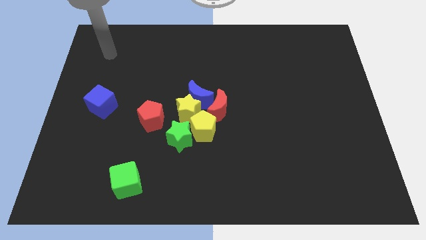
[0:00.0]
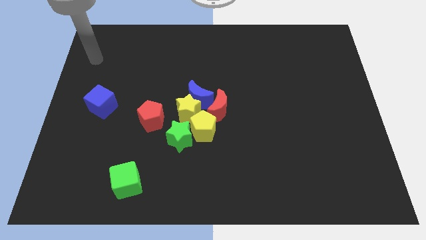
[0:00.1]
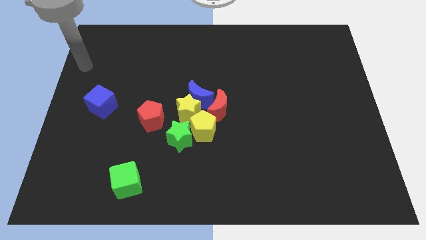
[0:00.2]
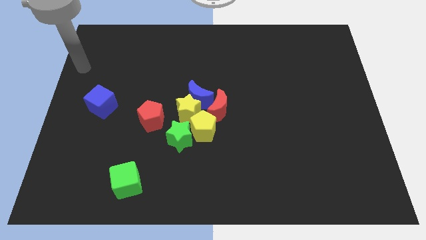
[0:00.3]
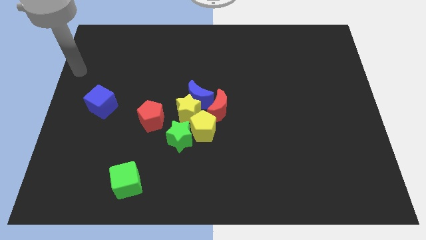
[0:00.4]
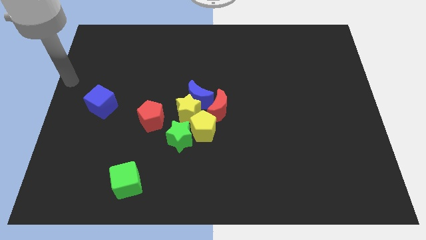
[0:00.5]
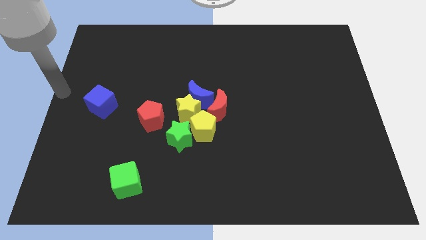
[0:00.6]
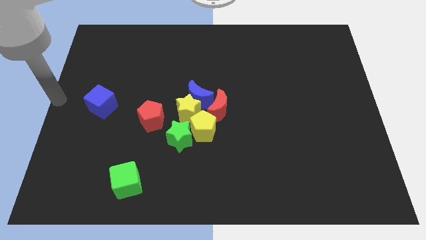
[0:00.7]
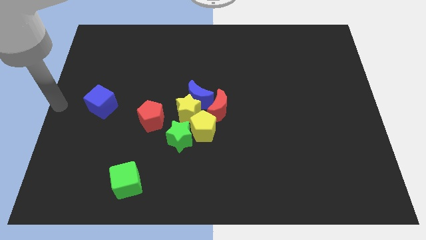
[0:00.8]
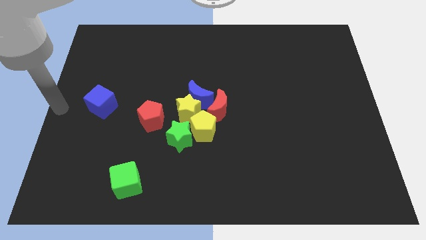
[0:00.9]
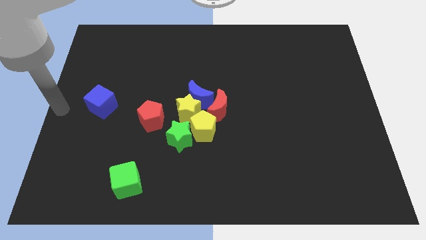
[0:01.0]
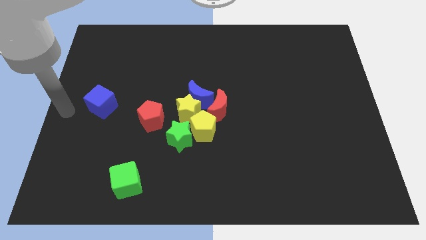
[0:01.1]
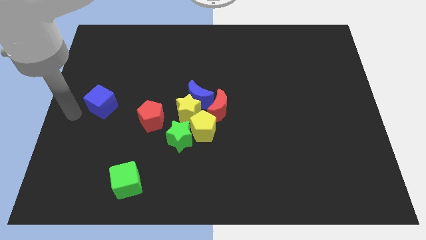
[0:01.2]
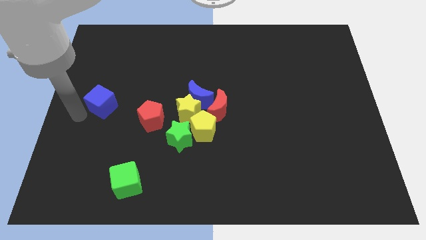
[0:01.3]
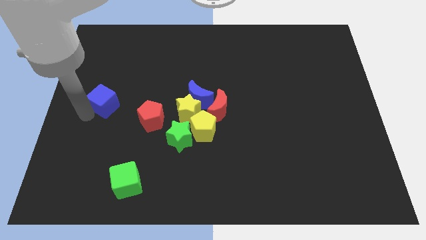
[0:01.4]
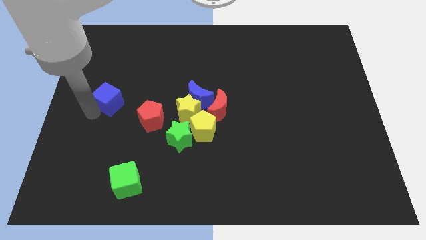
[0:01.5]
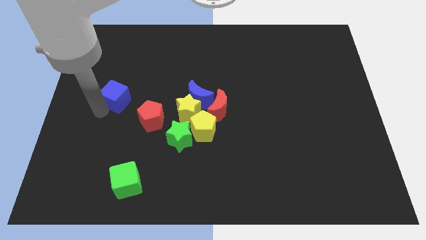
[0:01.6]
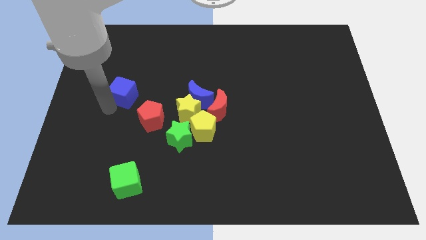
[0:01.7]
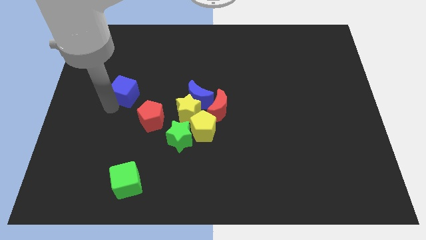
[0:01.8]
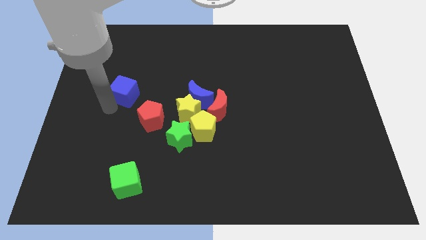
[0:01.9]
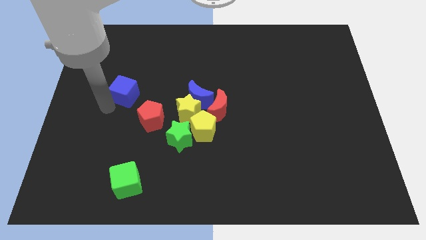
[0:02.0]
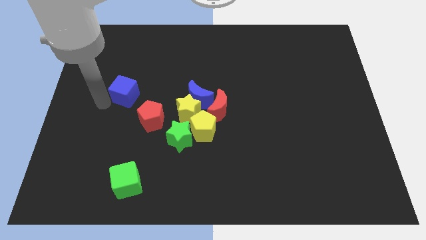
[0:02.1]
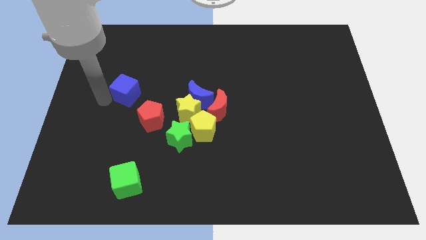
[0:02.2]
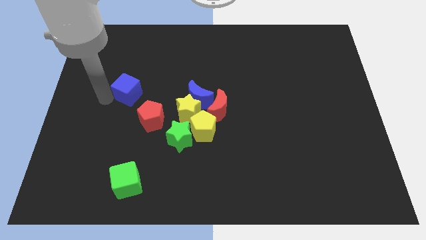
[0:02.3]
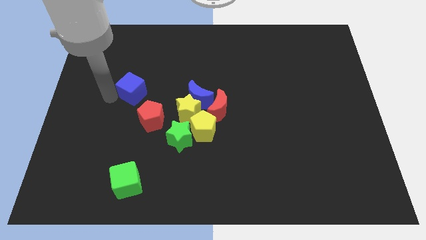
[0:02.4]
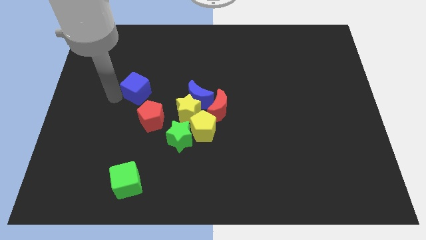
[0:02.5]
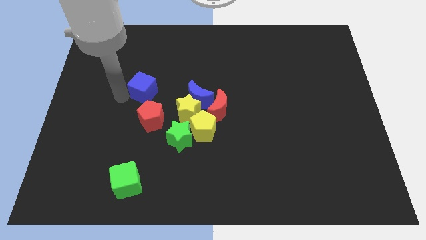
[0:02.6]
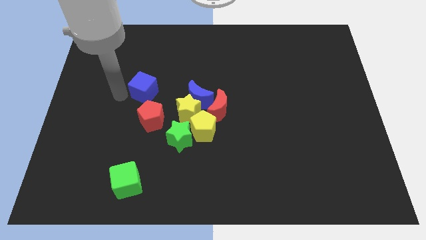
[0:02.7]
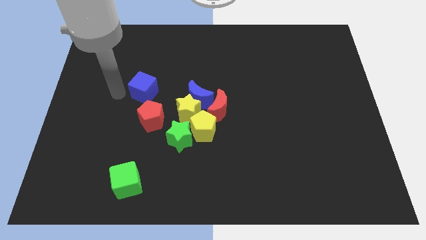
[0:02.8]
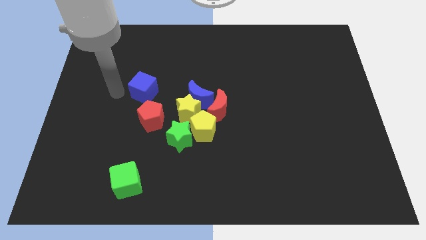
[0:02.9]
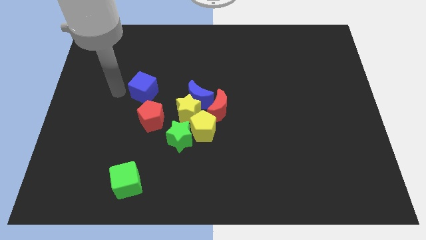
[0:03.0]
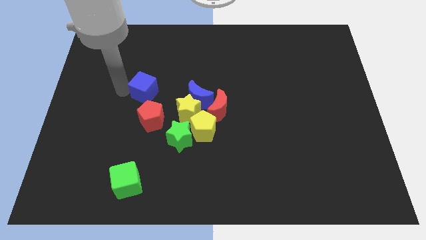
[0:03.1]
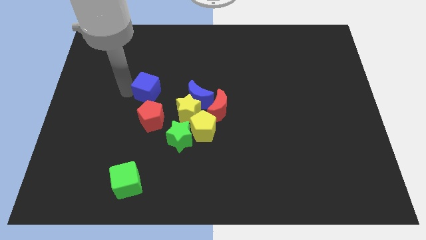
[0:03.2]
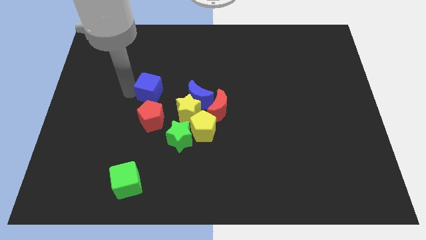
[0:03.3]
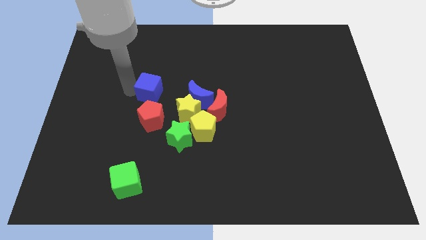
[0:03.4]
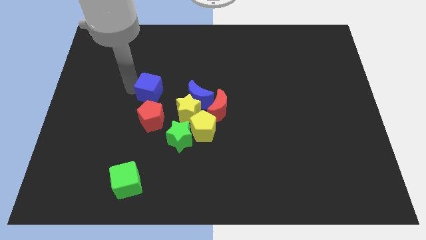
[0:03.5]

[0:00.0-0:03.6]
push the blue cube to the top of the red pentagon

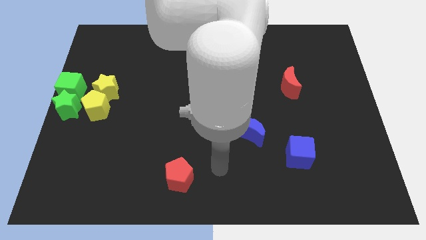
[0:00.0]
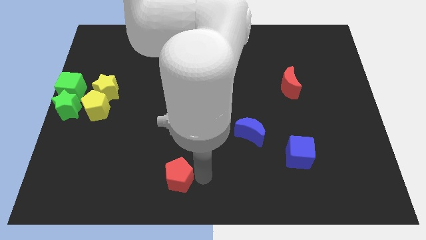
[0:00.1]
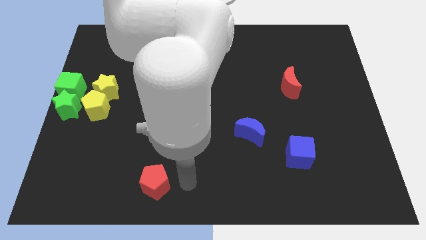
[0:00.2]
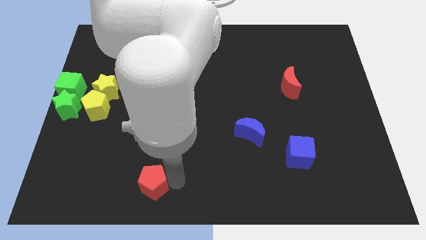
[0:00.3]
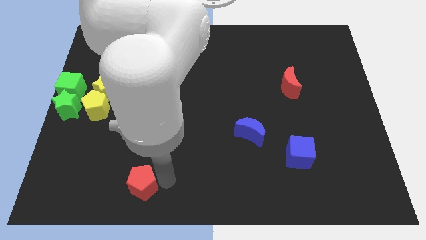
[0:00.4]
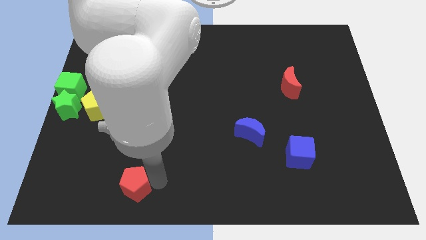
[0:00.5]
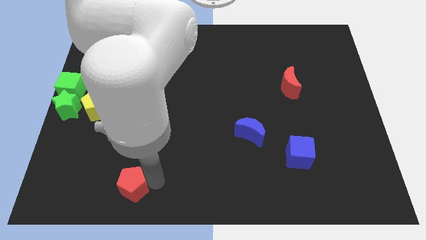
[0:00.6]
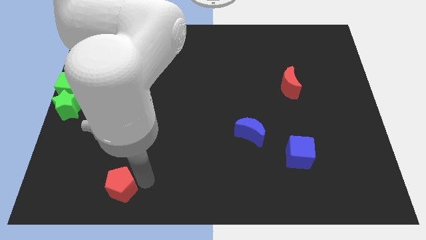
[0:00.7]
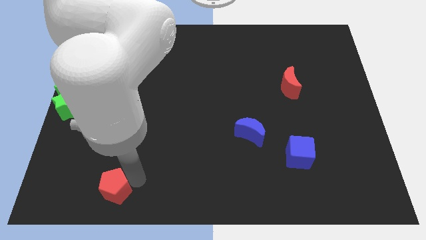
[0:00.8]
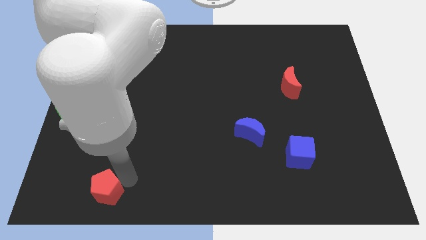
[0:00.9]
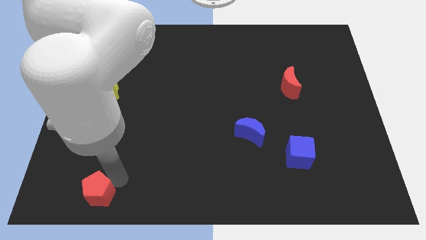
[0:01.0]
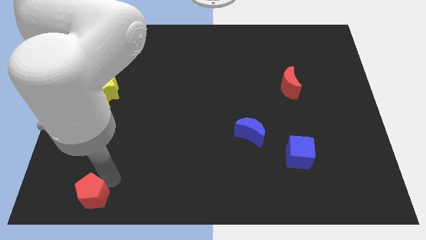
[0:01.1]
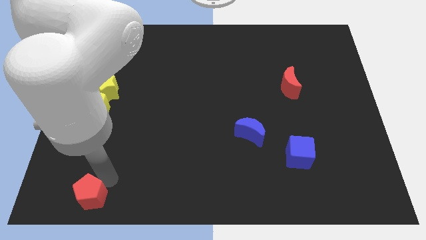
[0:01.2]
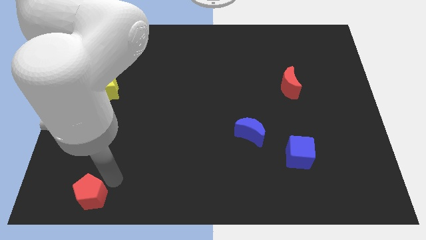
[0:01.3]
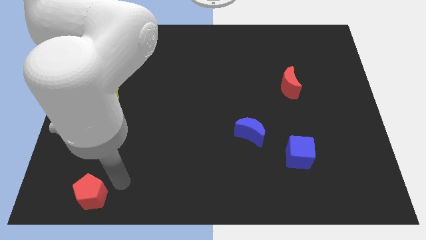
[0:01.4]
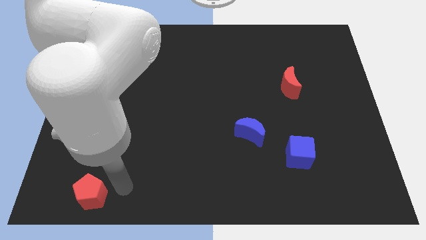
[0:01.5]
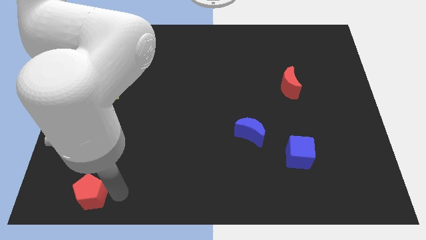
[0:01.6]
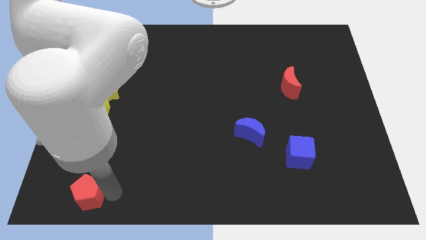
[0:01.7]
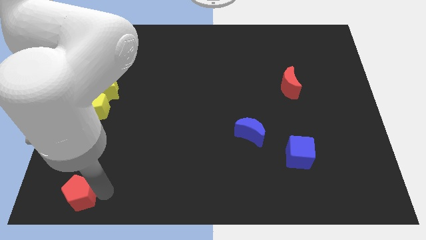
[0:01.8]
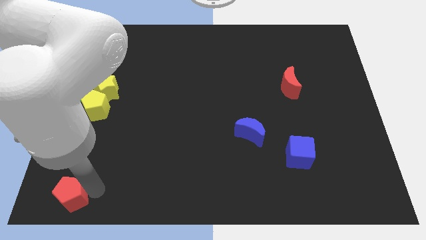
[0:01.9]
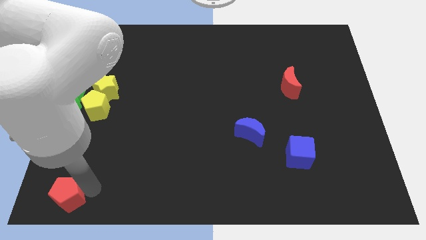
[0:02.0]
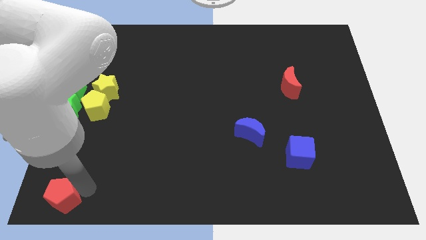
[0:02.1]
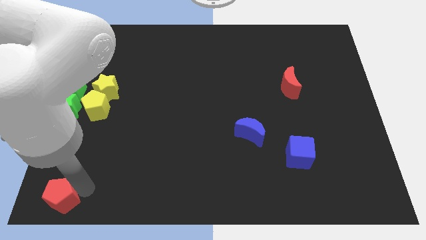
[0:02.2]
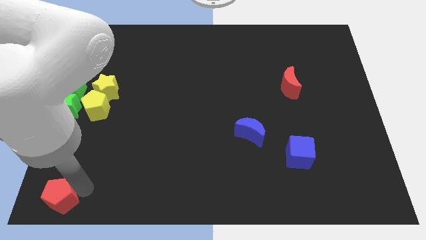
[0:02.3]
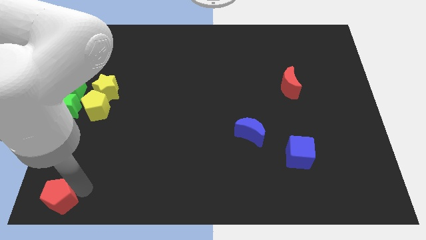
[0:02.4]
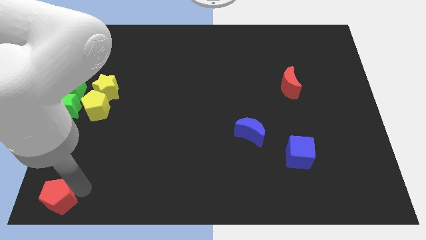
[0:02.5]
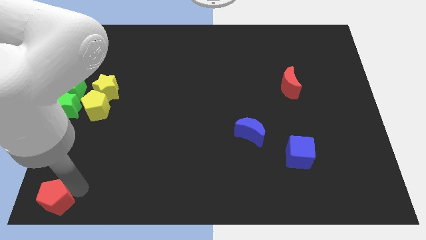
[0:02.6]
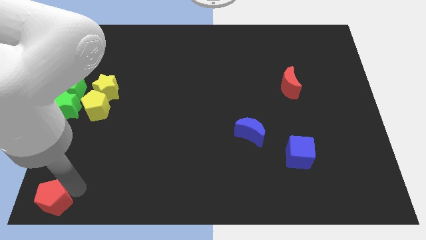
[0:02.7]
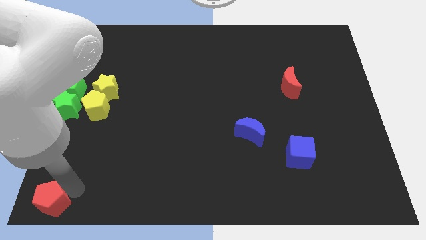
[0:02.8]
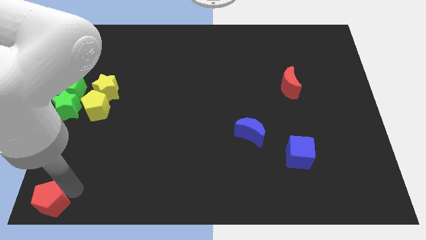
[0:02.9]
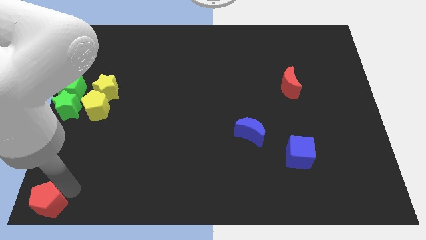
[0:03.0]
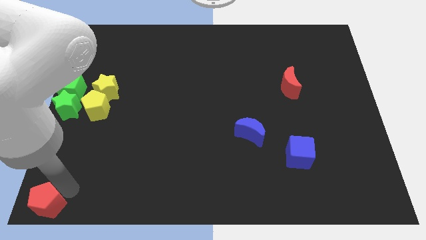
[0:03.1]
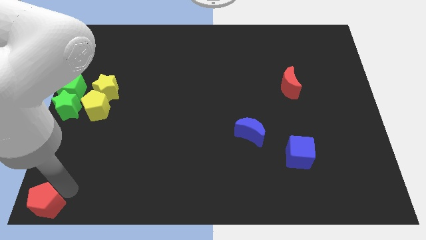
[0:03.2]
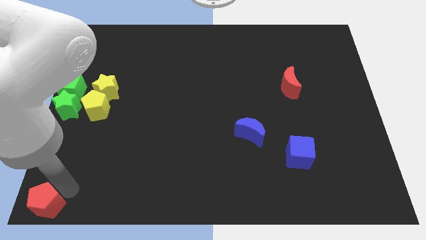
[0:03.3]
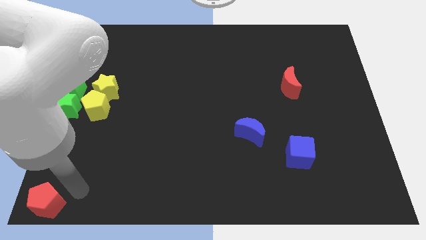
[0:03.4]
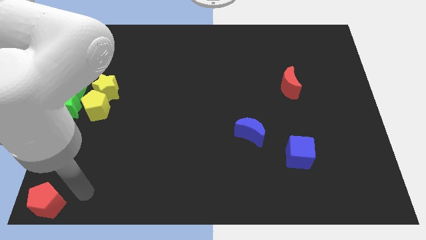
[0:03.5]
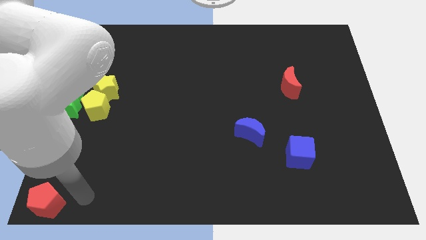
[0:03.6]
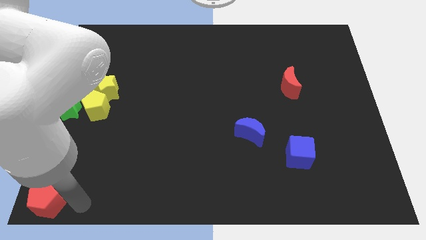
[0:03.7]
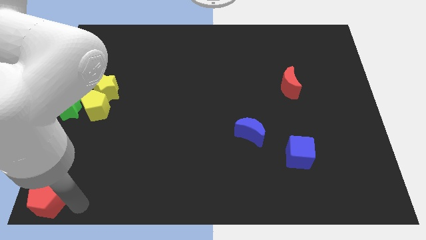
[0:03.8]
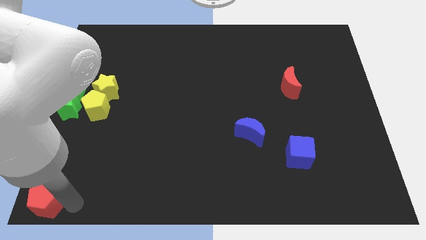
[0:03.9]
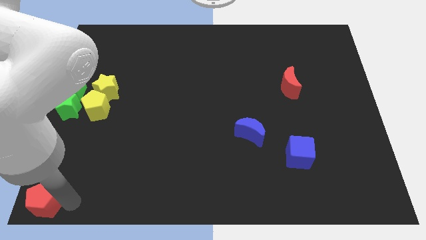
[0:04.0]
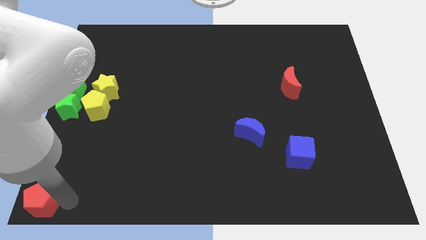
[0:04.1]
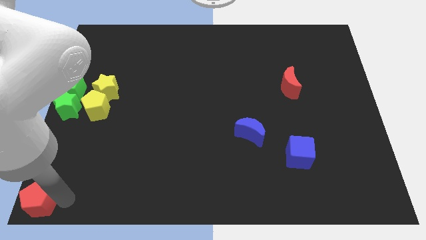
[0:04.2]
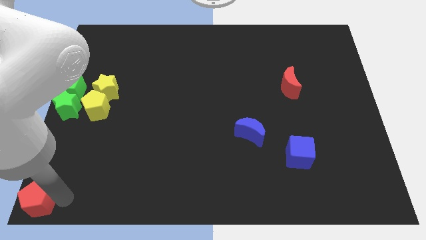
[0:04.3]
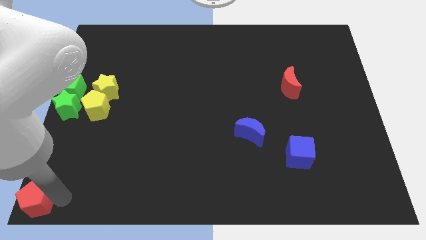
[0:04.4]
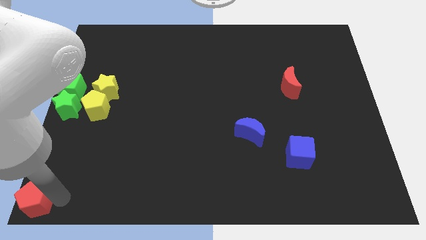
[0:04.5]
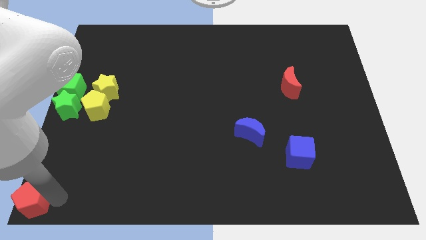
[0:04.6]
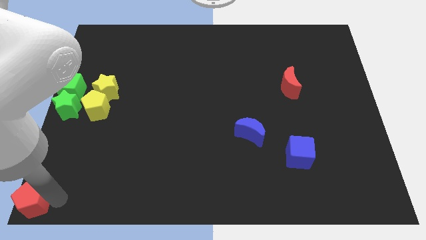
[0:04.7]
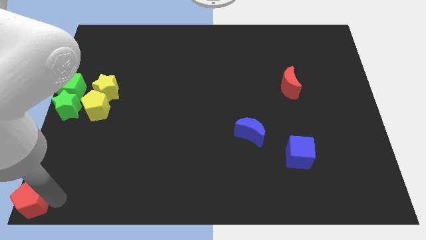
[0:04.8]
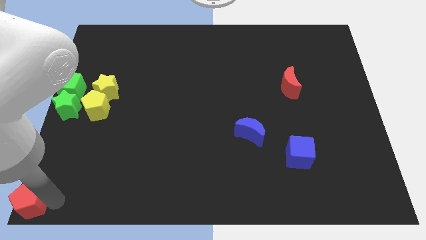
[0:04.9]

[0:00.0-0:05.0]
move the red pentagon to the bottom left of the board

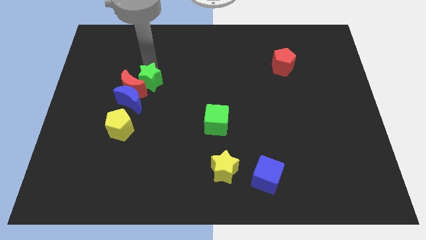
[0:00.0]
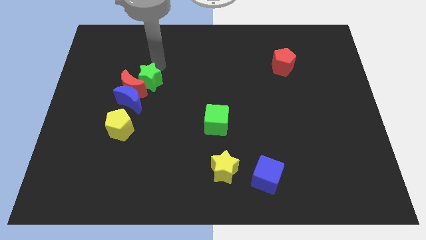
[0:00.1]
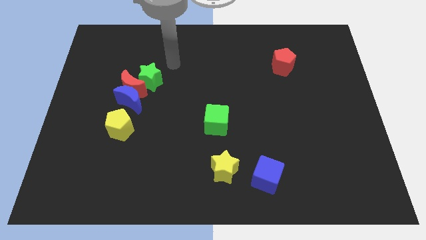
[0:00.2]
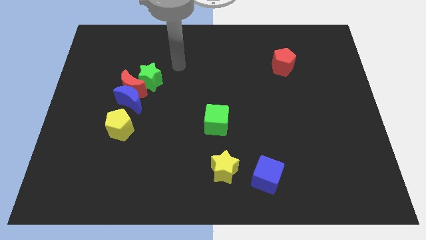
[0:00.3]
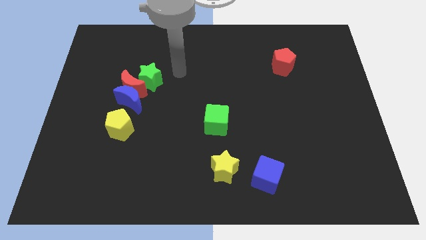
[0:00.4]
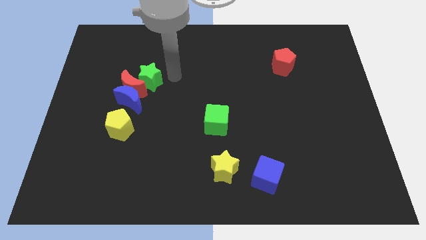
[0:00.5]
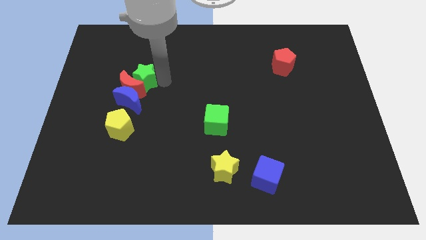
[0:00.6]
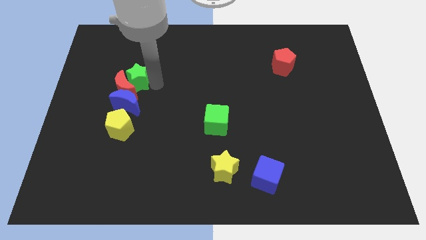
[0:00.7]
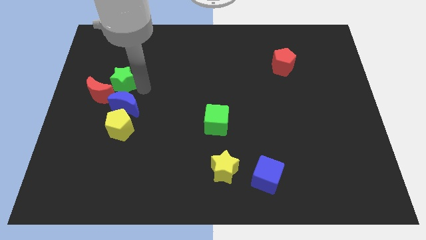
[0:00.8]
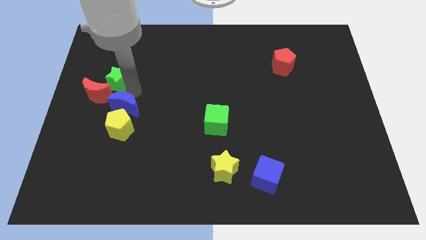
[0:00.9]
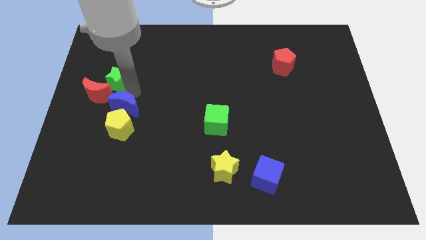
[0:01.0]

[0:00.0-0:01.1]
push the green star into the group of blocks
